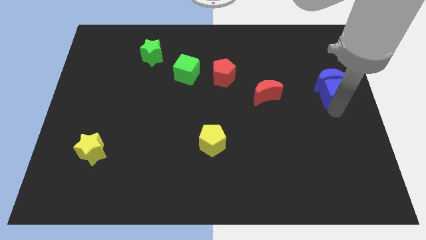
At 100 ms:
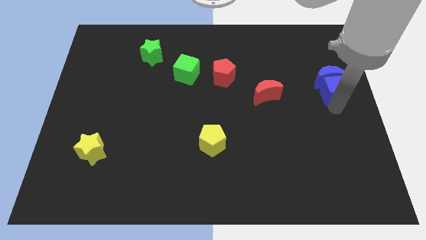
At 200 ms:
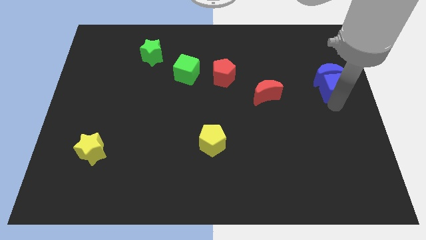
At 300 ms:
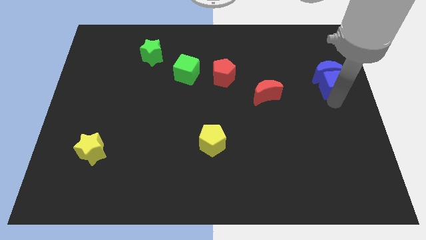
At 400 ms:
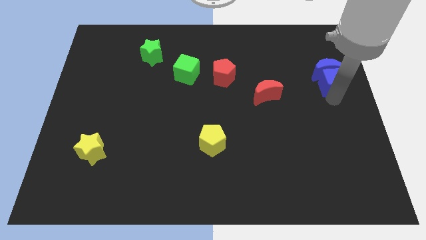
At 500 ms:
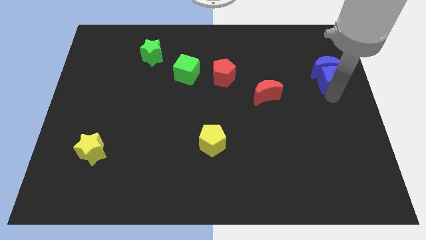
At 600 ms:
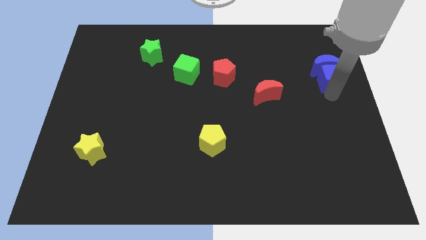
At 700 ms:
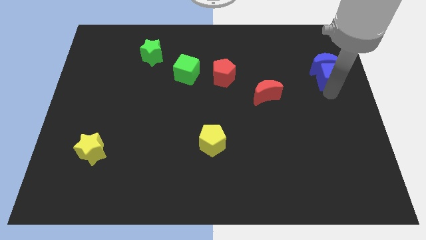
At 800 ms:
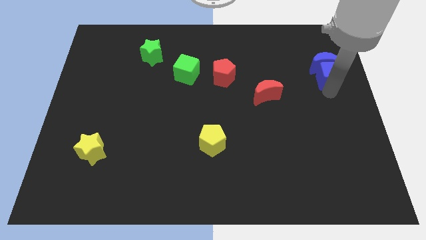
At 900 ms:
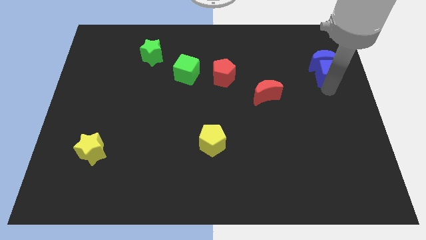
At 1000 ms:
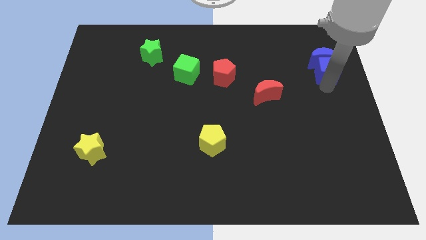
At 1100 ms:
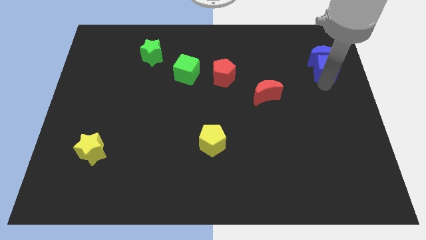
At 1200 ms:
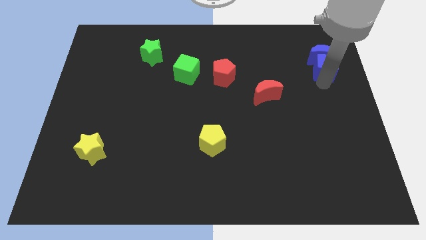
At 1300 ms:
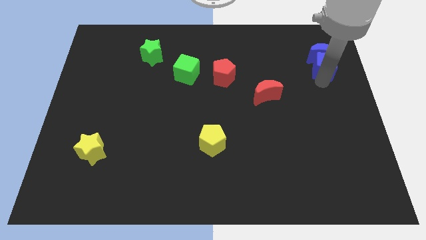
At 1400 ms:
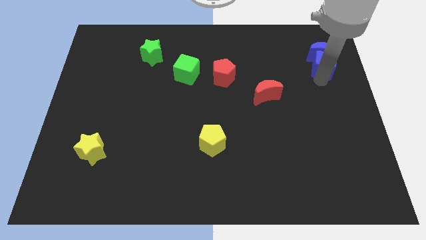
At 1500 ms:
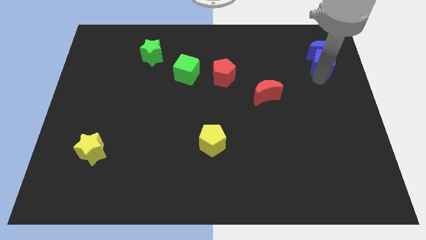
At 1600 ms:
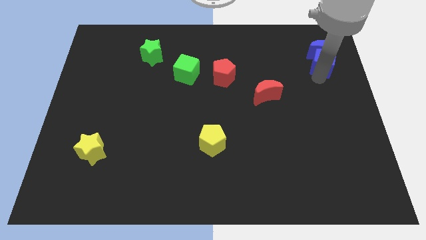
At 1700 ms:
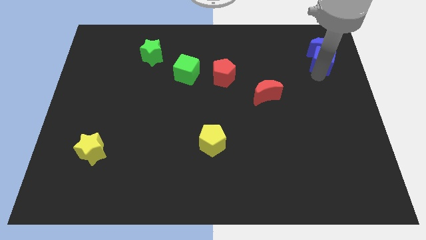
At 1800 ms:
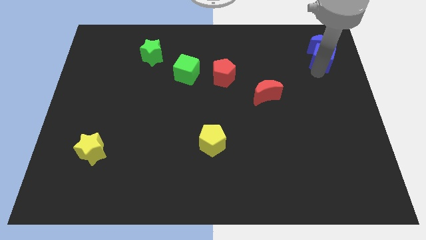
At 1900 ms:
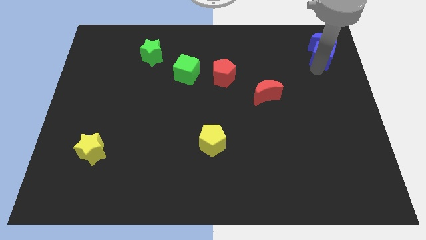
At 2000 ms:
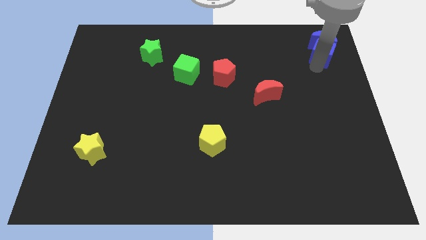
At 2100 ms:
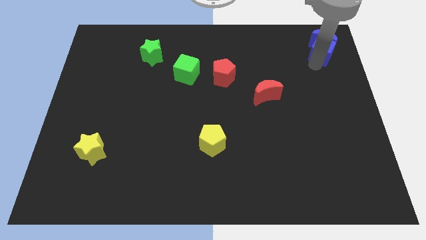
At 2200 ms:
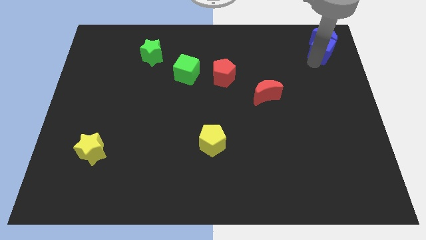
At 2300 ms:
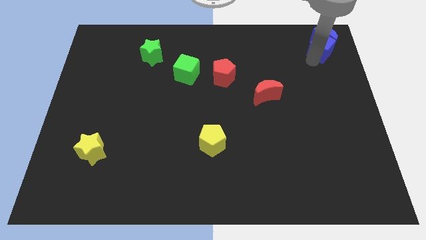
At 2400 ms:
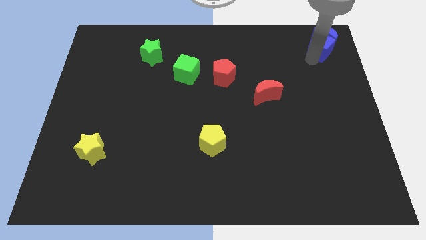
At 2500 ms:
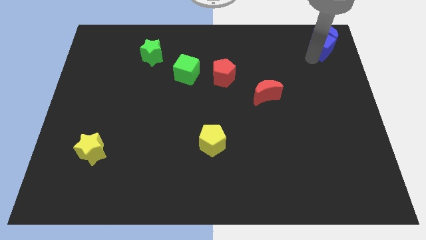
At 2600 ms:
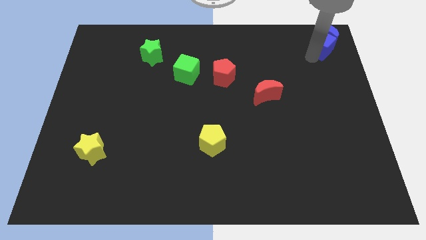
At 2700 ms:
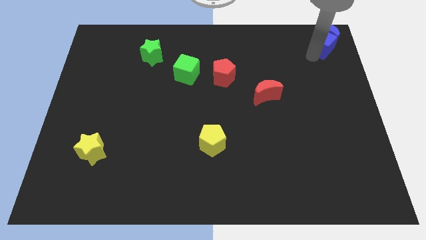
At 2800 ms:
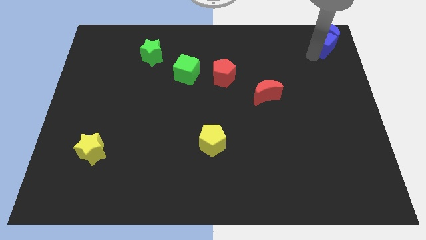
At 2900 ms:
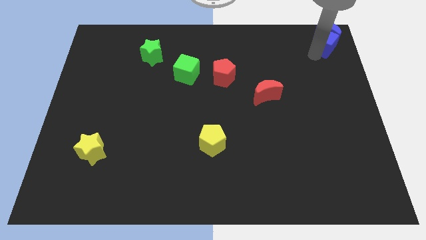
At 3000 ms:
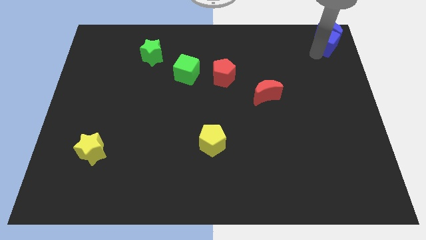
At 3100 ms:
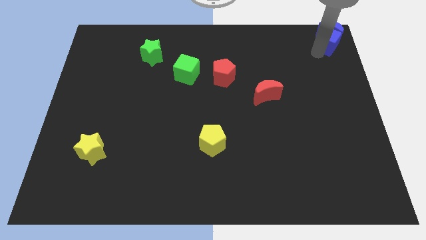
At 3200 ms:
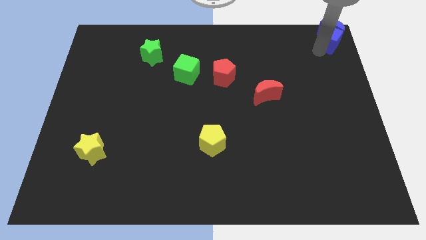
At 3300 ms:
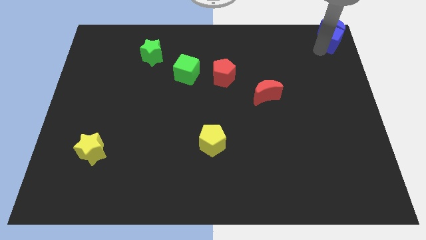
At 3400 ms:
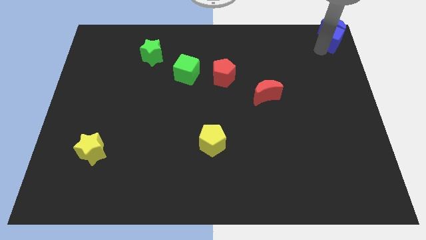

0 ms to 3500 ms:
move the blue blocks to top right corner of the board

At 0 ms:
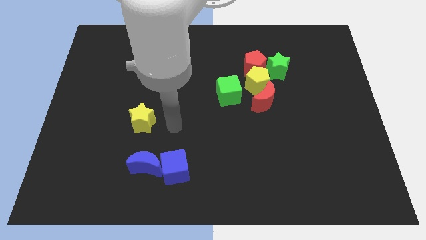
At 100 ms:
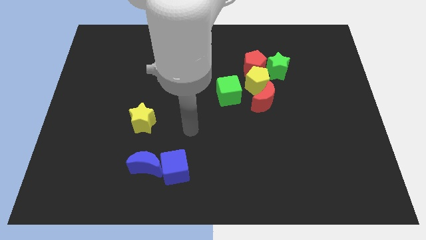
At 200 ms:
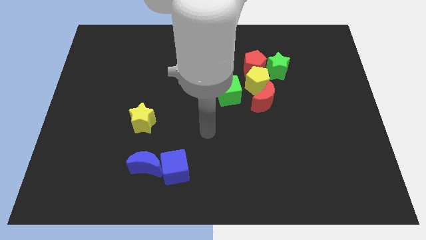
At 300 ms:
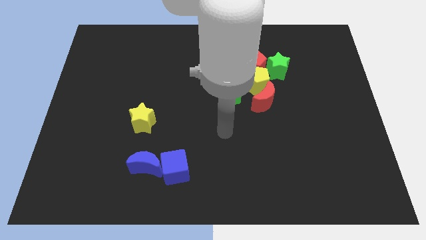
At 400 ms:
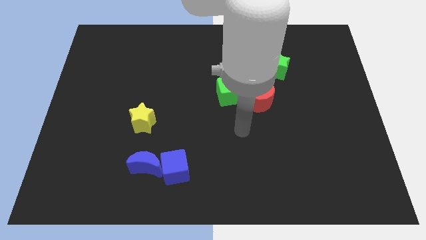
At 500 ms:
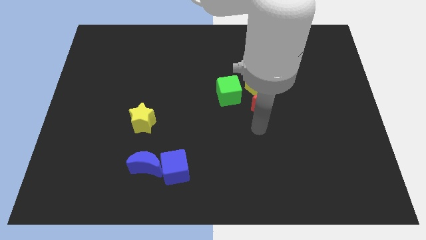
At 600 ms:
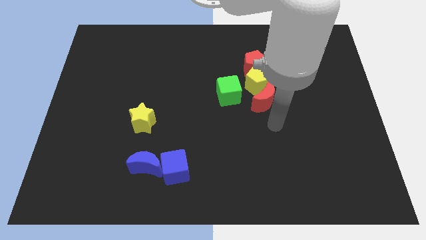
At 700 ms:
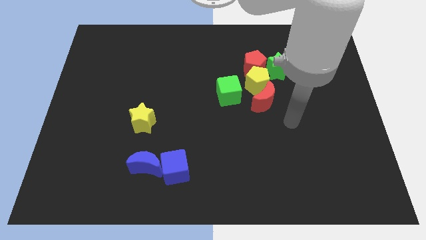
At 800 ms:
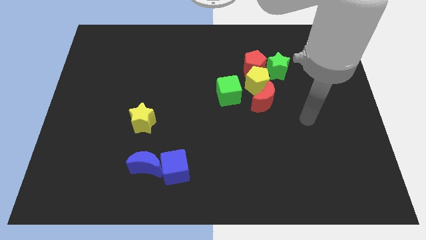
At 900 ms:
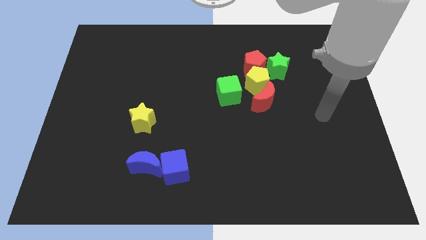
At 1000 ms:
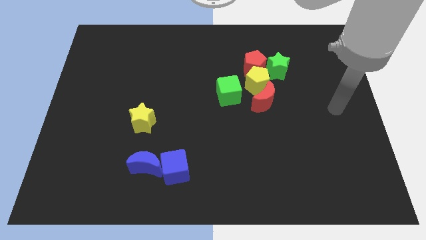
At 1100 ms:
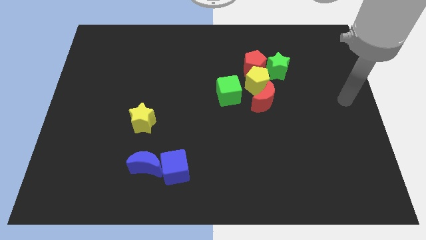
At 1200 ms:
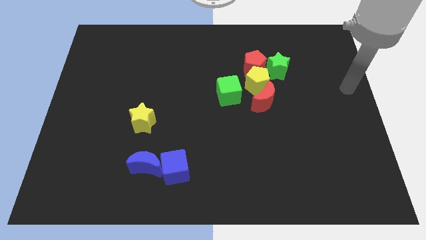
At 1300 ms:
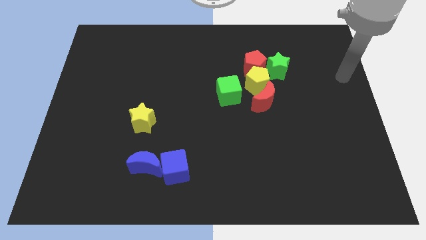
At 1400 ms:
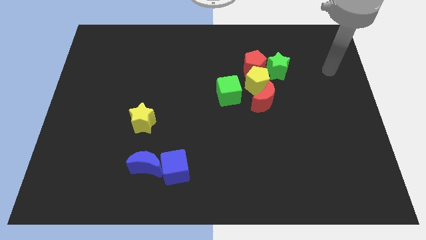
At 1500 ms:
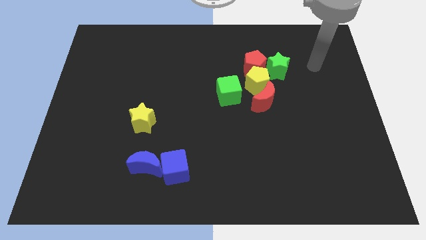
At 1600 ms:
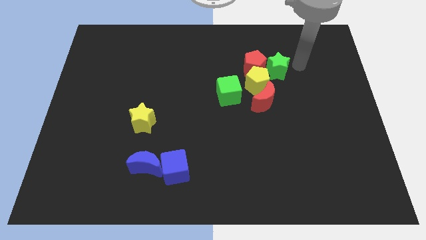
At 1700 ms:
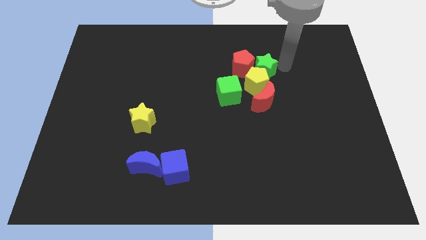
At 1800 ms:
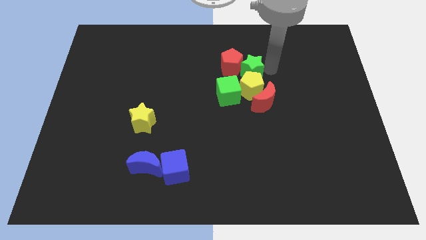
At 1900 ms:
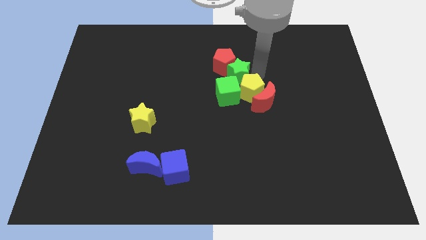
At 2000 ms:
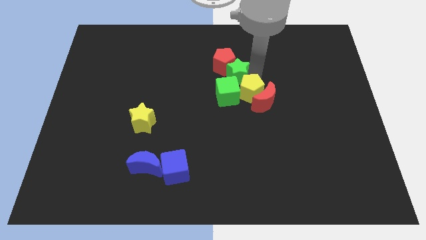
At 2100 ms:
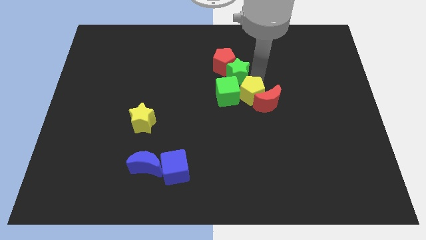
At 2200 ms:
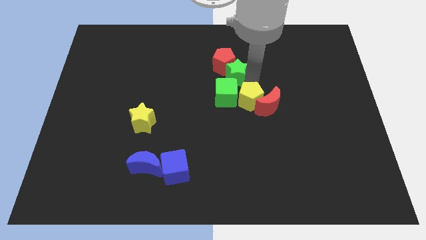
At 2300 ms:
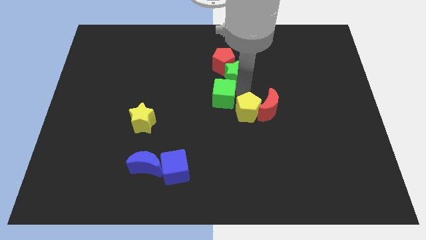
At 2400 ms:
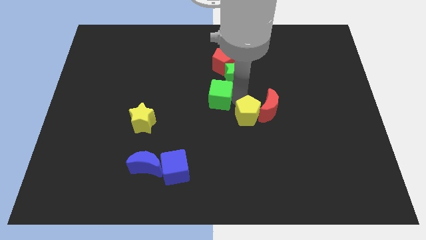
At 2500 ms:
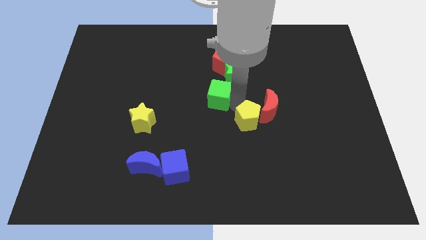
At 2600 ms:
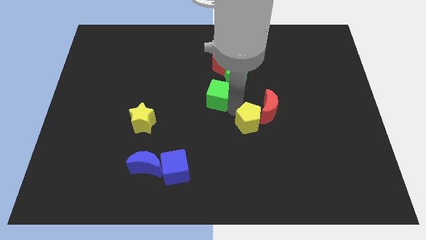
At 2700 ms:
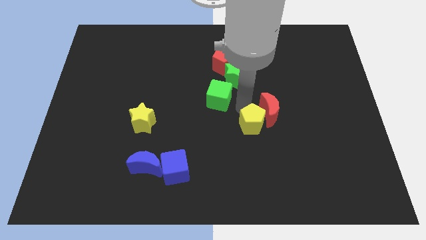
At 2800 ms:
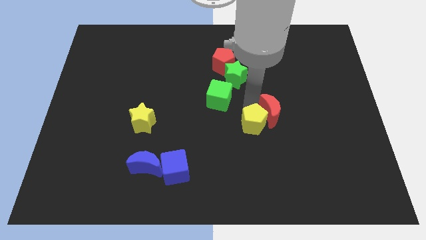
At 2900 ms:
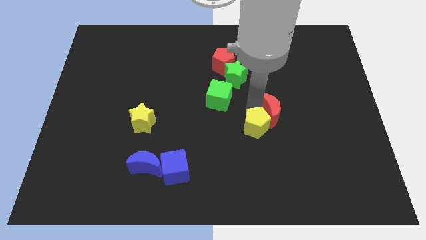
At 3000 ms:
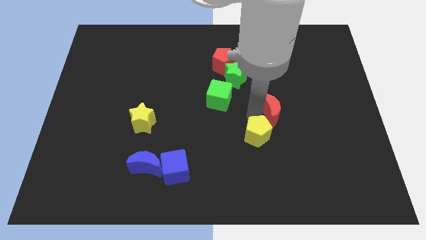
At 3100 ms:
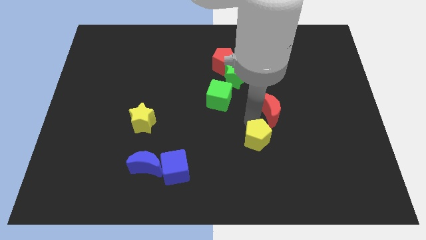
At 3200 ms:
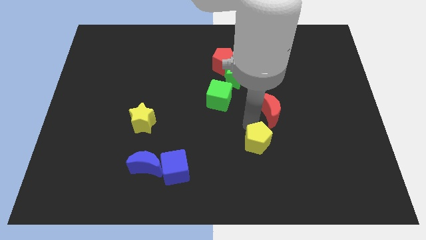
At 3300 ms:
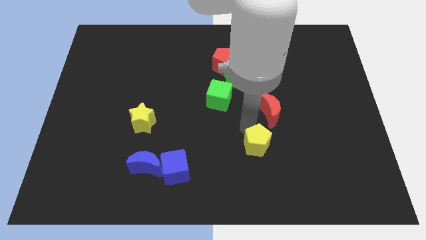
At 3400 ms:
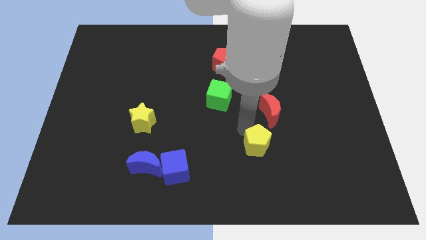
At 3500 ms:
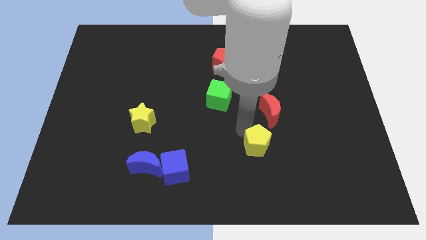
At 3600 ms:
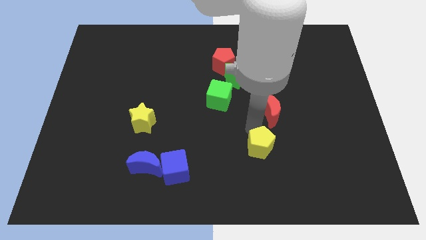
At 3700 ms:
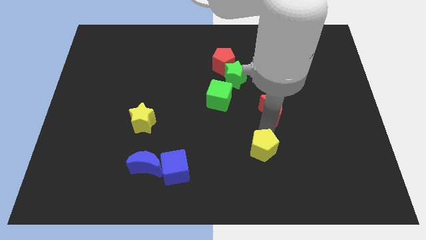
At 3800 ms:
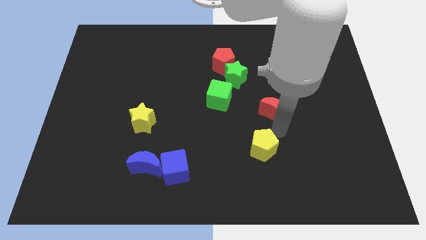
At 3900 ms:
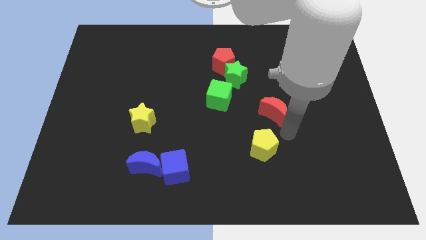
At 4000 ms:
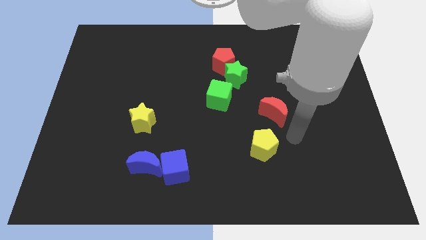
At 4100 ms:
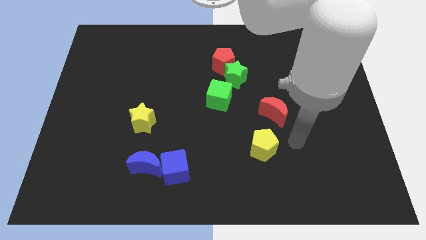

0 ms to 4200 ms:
separate the yellow pentagon from a group of blocks

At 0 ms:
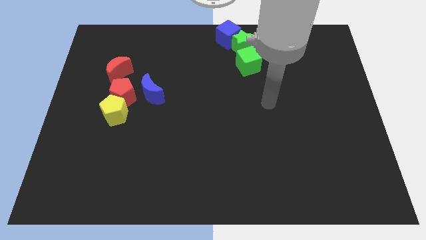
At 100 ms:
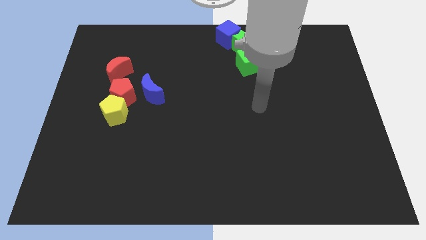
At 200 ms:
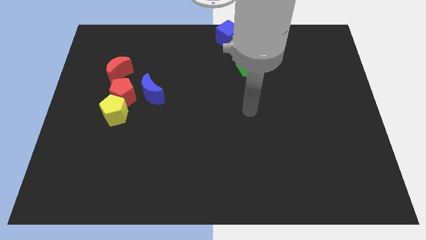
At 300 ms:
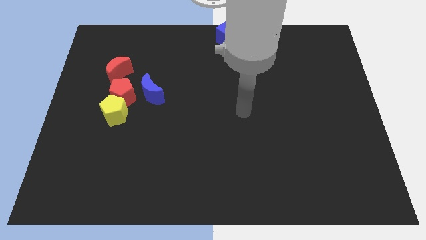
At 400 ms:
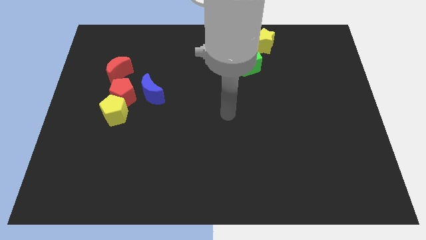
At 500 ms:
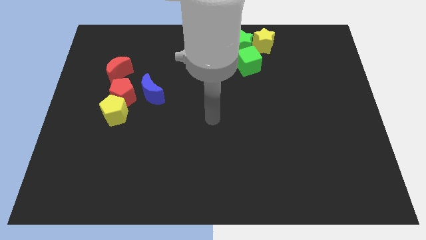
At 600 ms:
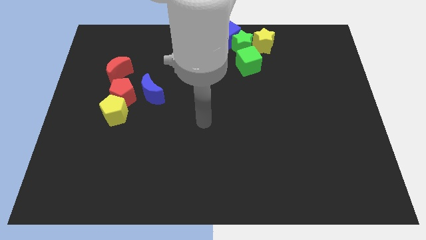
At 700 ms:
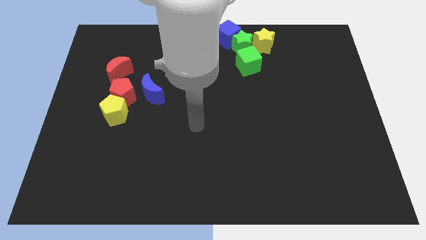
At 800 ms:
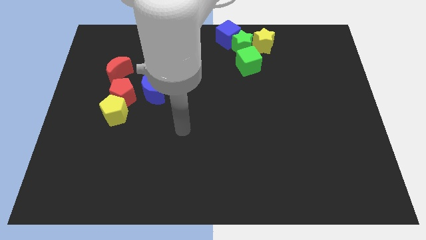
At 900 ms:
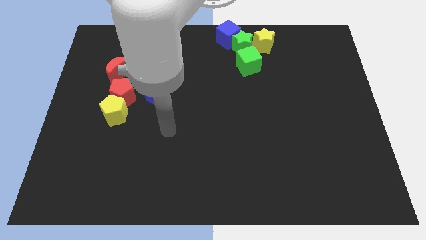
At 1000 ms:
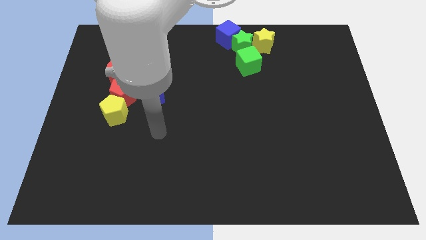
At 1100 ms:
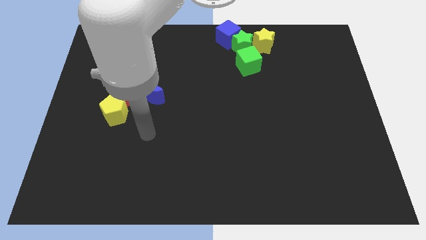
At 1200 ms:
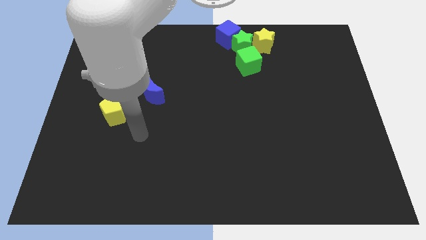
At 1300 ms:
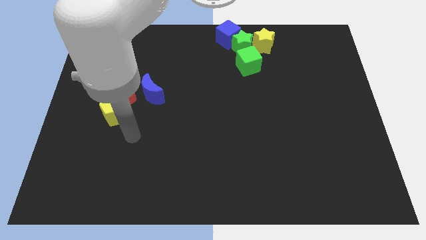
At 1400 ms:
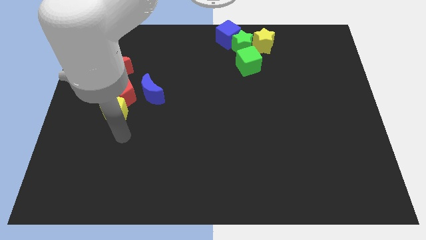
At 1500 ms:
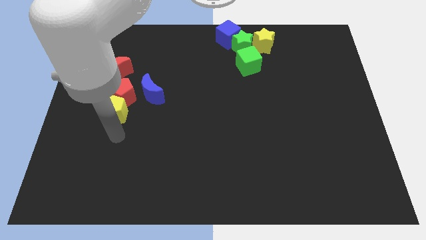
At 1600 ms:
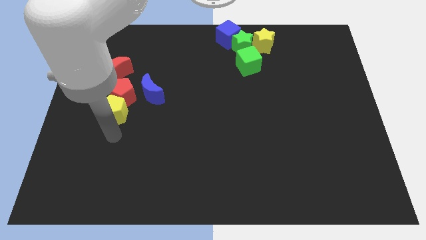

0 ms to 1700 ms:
move your arm to the bottom of the yellow pentagon
